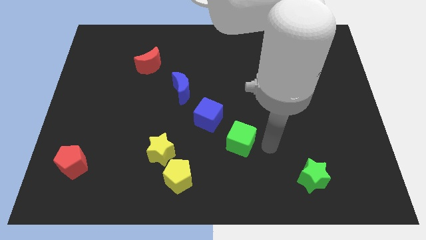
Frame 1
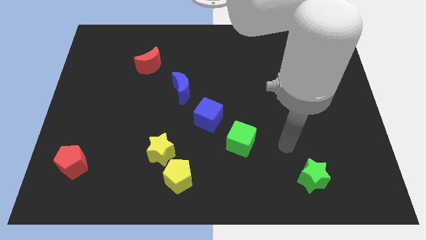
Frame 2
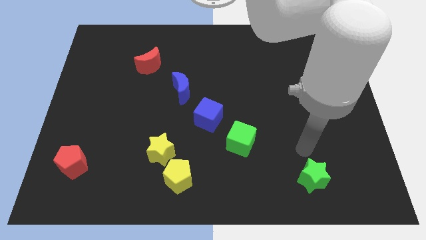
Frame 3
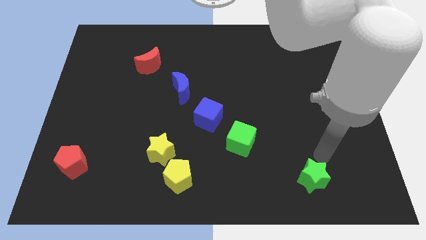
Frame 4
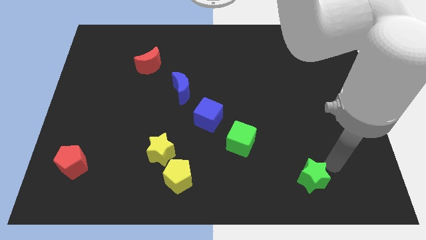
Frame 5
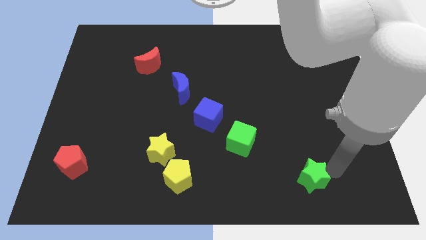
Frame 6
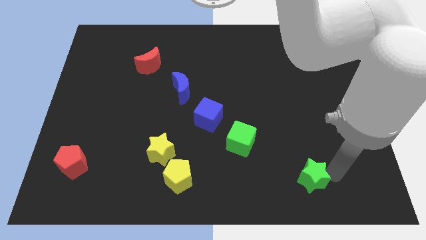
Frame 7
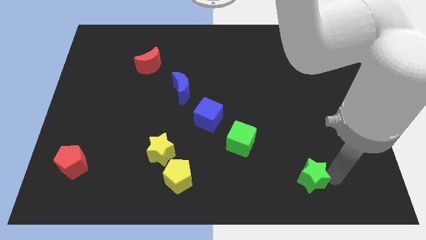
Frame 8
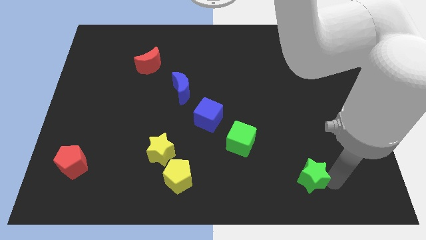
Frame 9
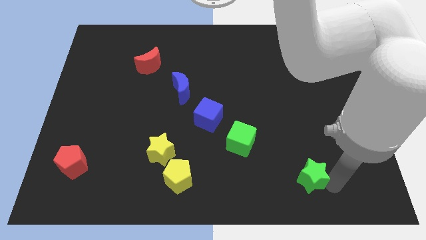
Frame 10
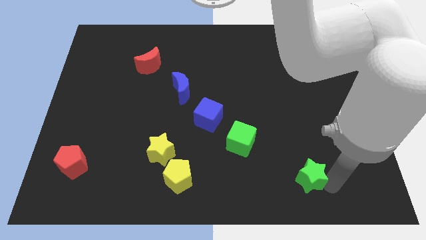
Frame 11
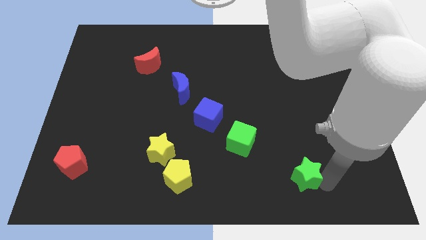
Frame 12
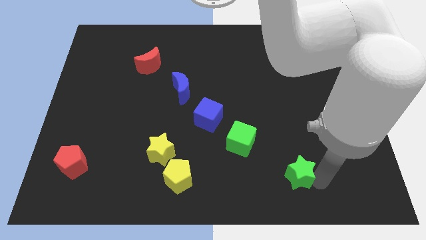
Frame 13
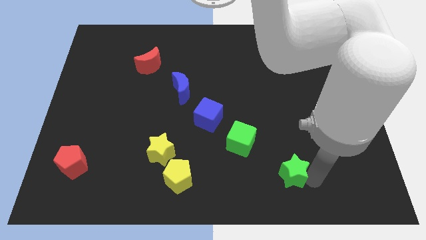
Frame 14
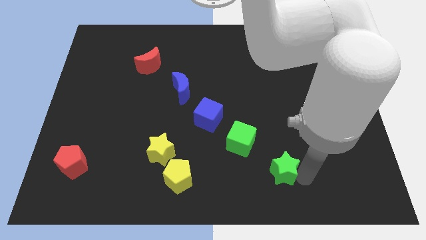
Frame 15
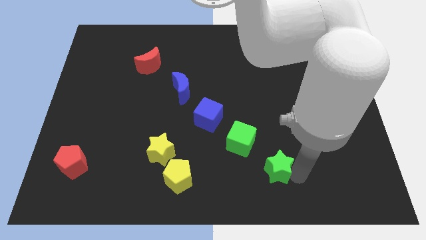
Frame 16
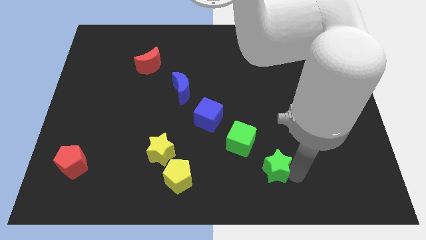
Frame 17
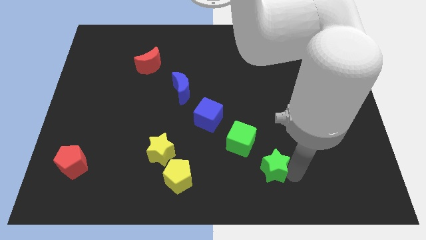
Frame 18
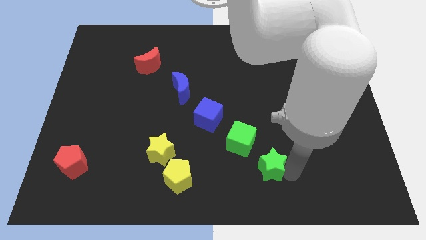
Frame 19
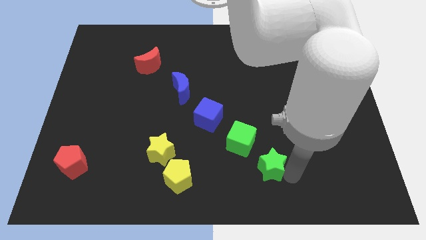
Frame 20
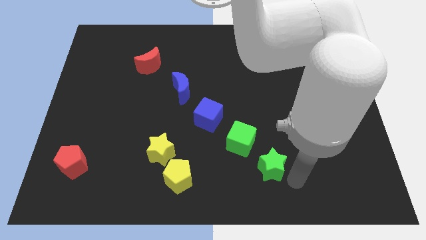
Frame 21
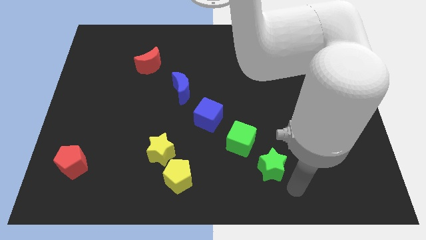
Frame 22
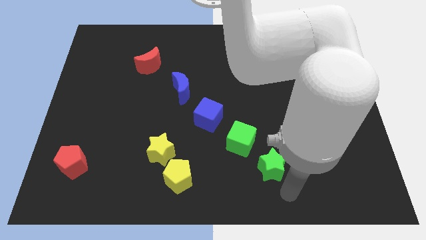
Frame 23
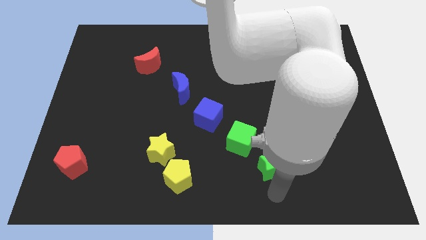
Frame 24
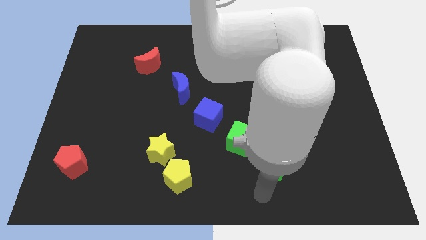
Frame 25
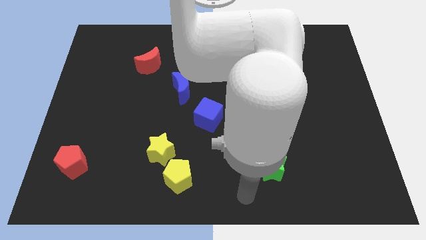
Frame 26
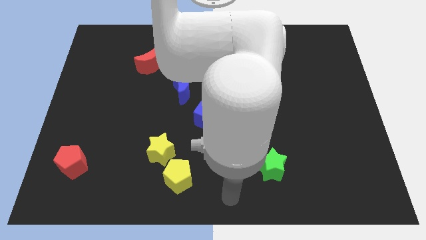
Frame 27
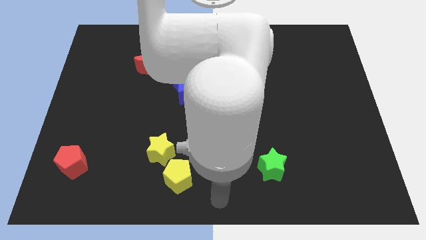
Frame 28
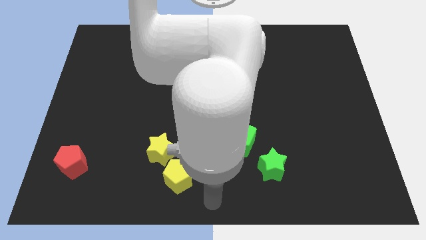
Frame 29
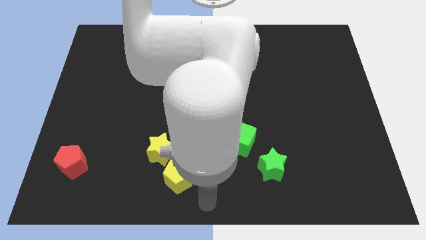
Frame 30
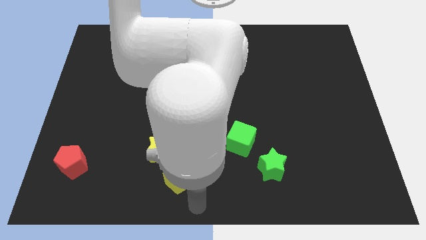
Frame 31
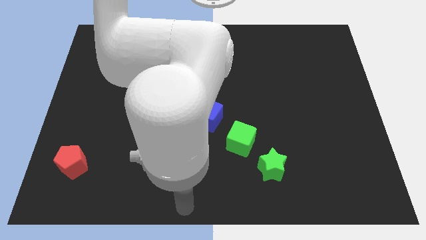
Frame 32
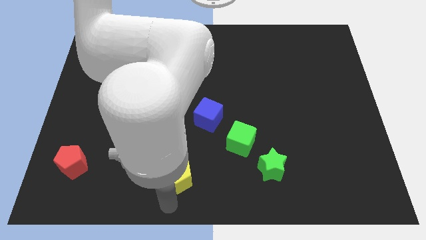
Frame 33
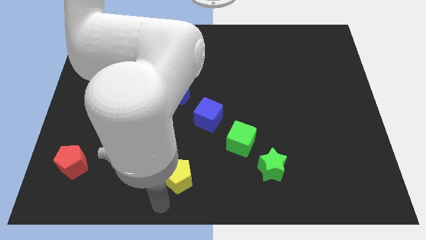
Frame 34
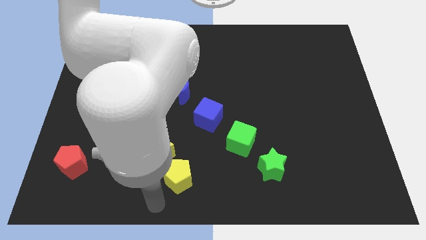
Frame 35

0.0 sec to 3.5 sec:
move the green star near the green cube

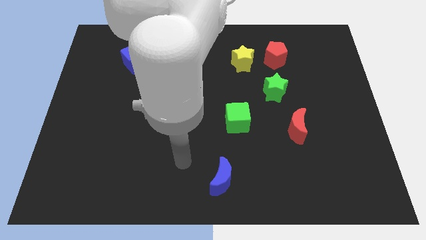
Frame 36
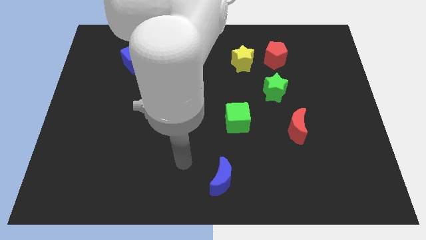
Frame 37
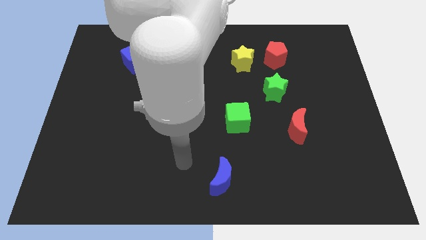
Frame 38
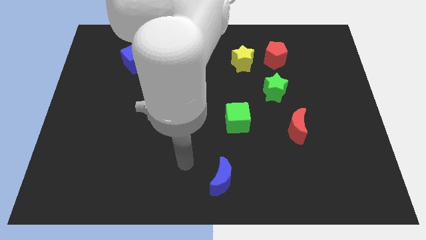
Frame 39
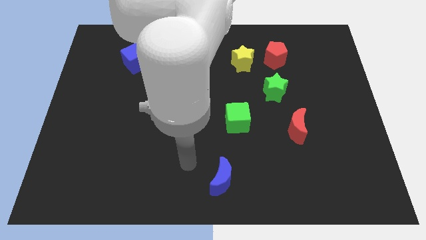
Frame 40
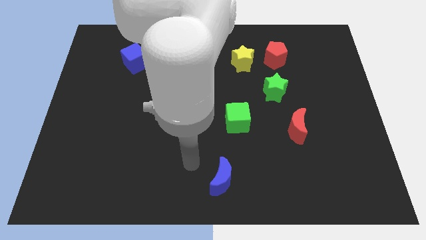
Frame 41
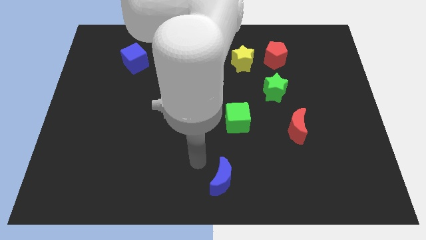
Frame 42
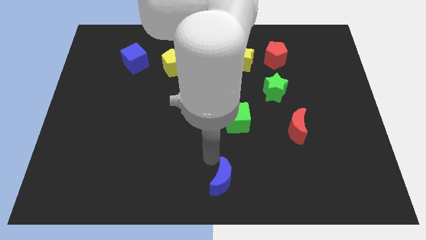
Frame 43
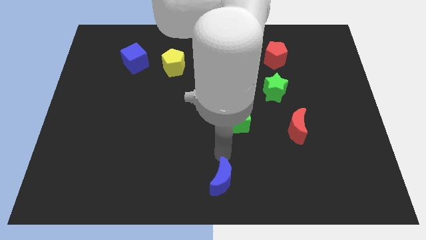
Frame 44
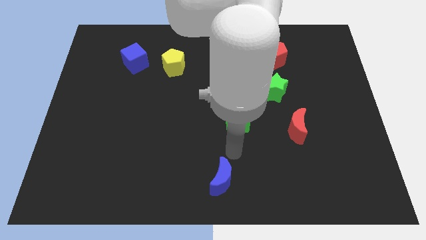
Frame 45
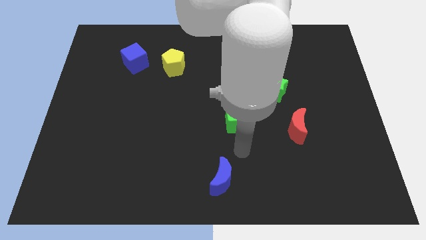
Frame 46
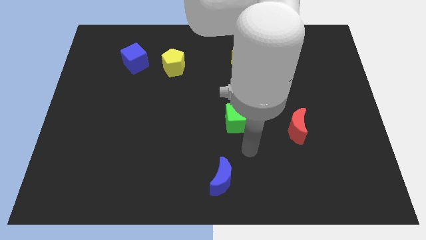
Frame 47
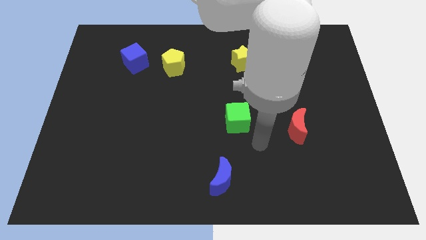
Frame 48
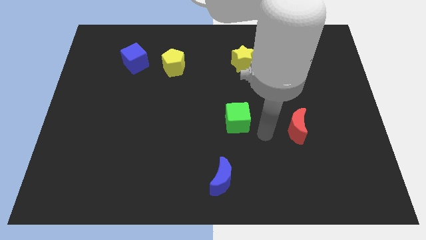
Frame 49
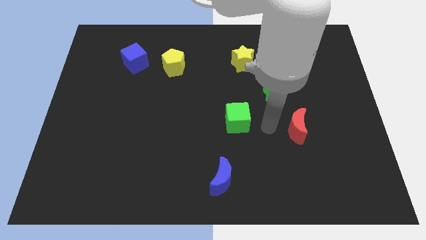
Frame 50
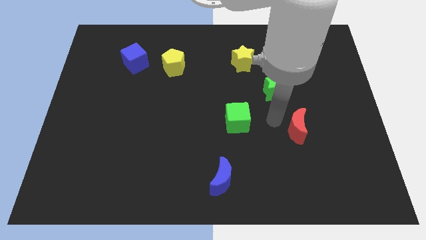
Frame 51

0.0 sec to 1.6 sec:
place your arm in between green cube and red moon

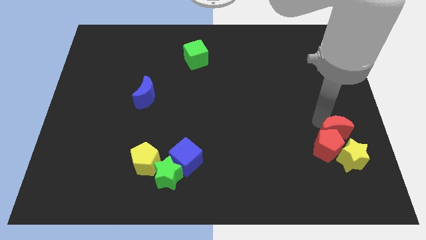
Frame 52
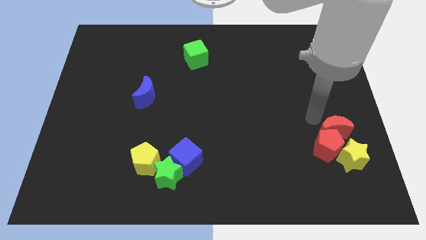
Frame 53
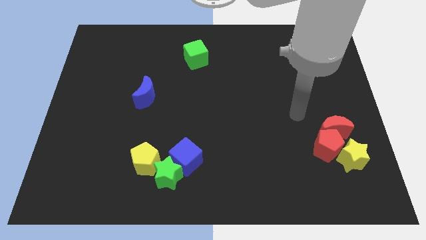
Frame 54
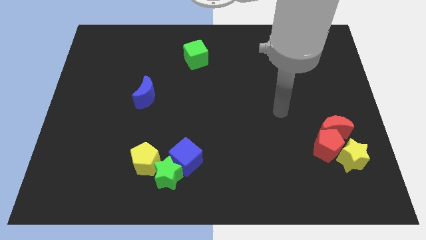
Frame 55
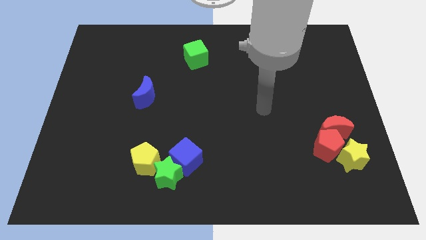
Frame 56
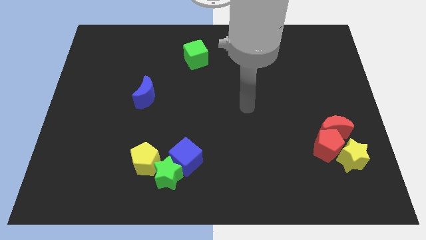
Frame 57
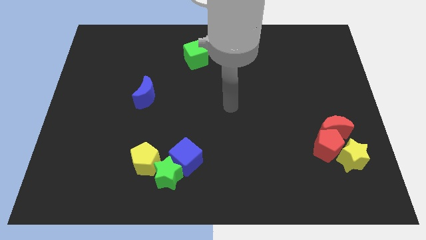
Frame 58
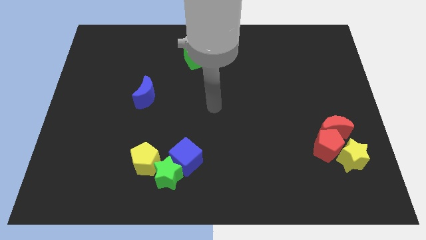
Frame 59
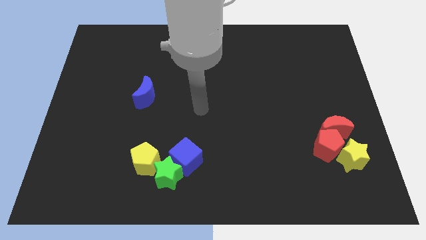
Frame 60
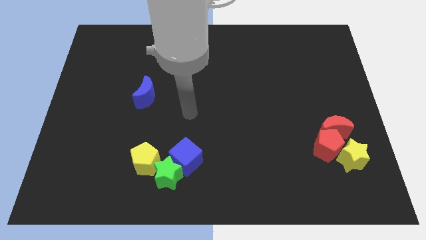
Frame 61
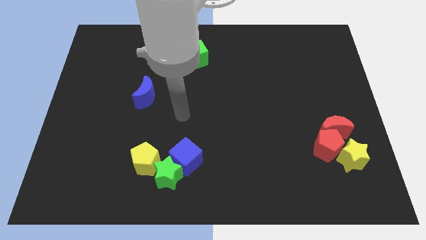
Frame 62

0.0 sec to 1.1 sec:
point your arm at the top of the blue cube

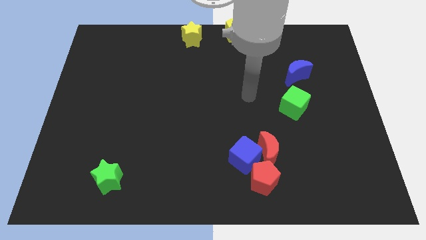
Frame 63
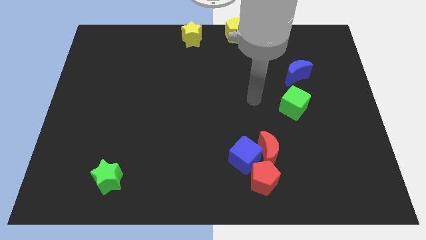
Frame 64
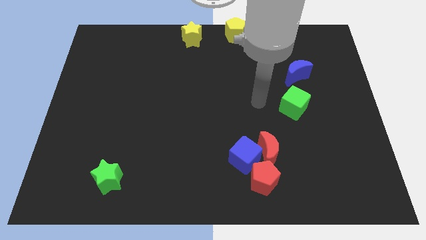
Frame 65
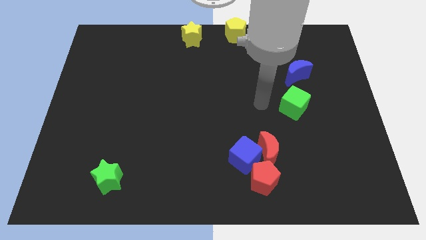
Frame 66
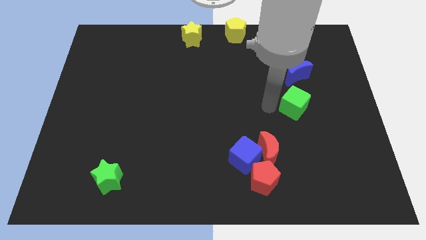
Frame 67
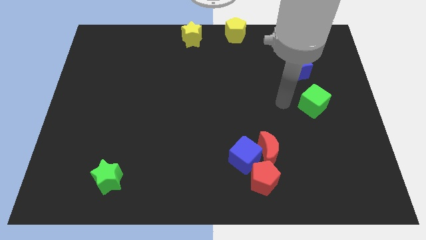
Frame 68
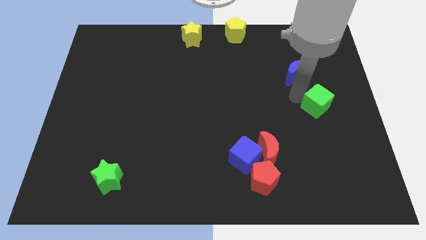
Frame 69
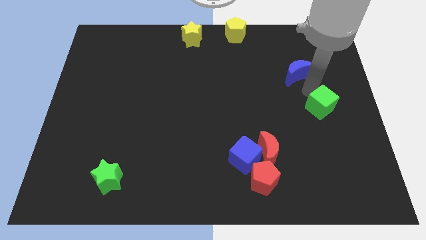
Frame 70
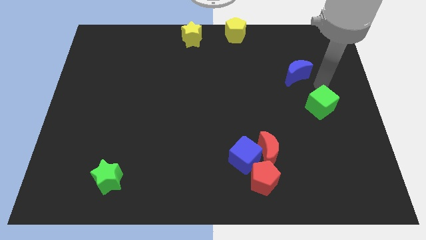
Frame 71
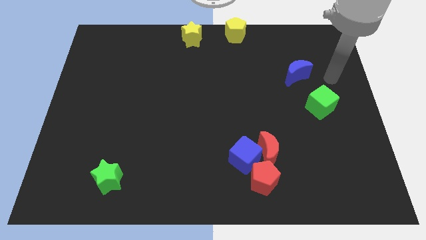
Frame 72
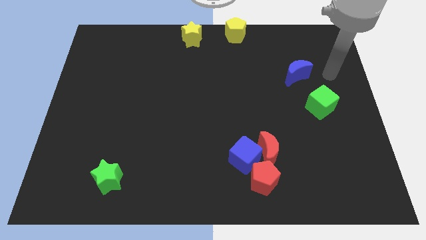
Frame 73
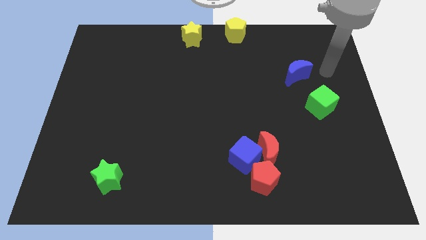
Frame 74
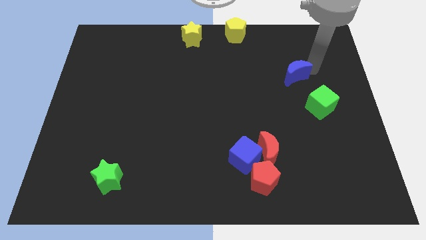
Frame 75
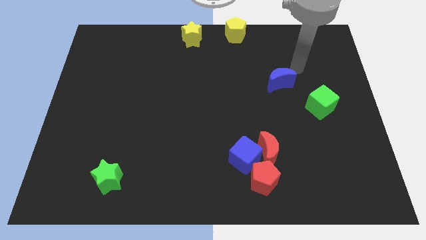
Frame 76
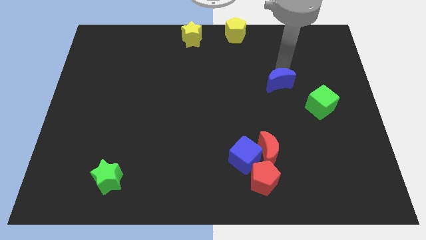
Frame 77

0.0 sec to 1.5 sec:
place the green cube towards the bottom right side of the blue crescent

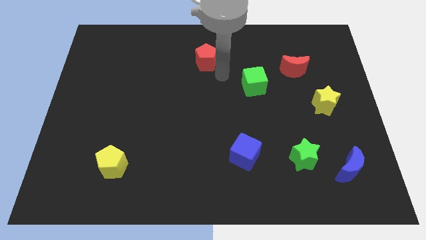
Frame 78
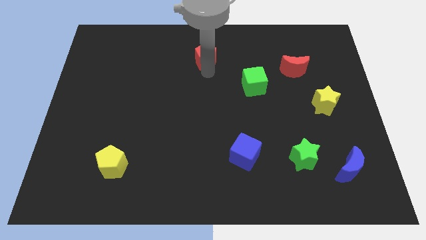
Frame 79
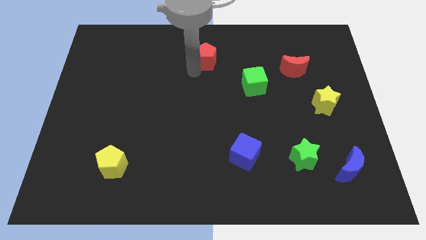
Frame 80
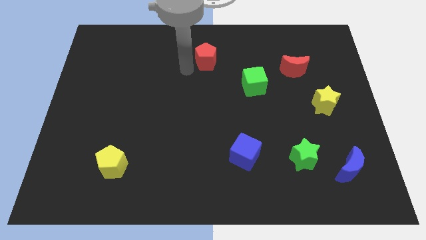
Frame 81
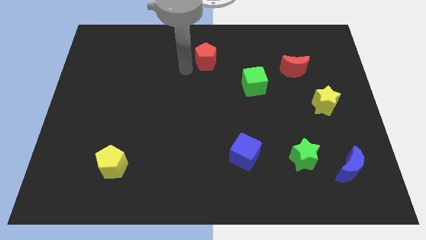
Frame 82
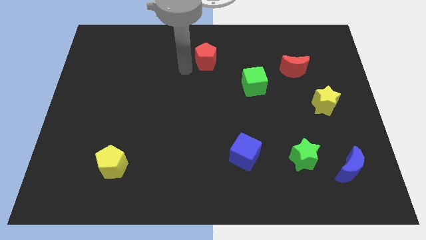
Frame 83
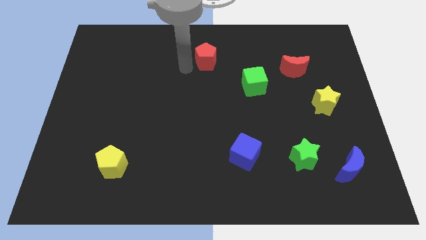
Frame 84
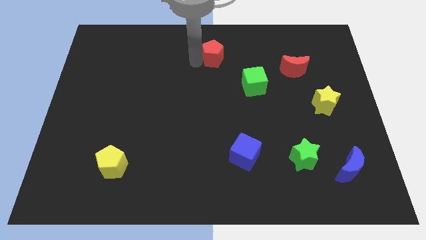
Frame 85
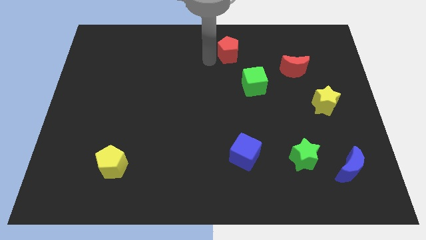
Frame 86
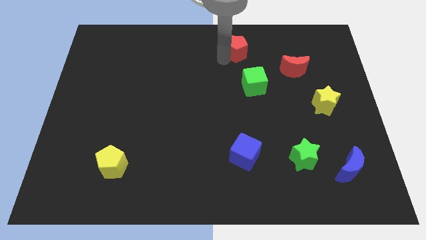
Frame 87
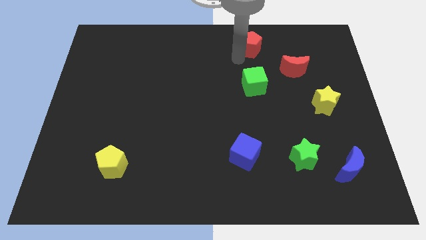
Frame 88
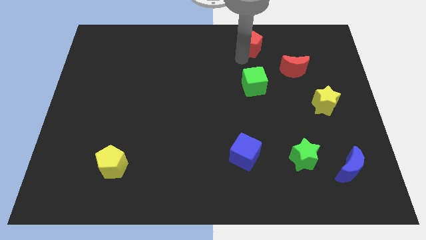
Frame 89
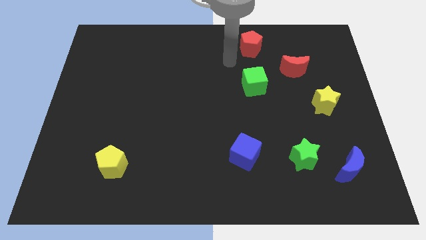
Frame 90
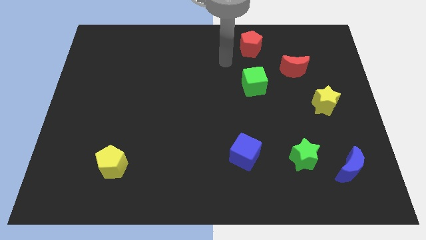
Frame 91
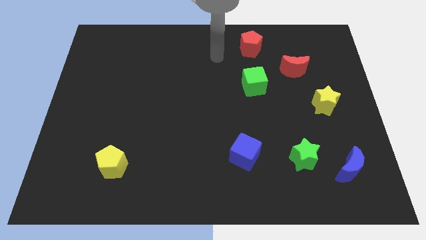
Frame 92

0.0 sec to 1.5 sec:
place the red pentagon vertically above the green cube
